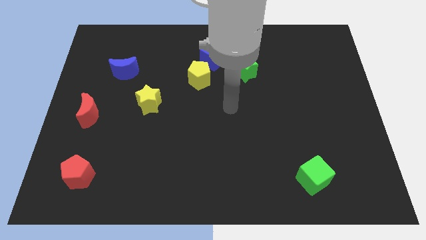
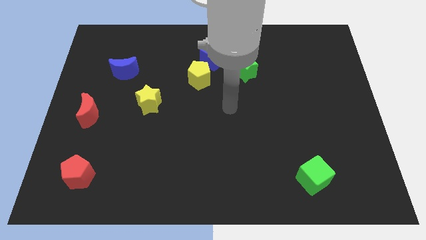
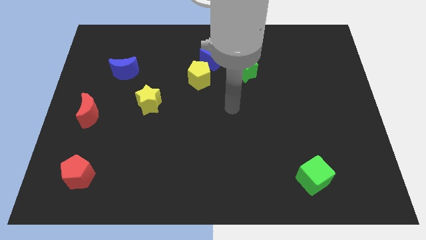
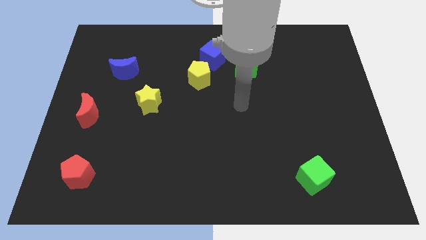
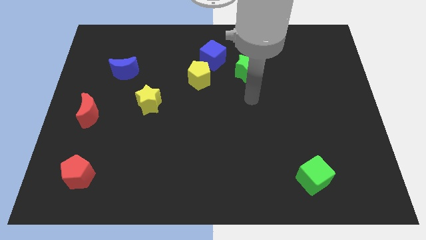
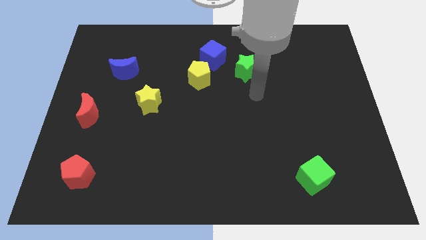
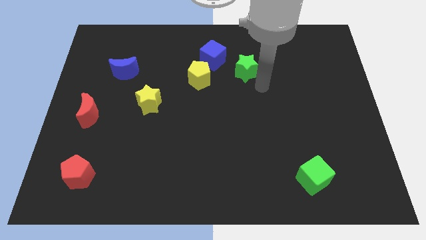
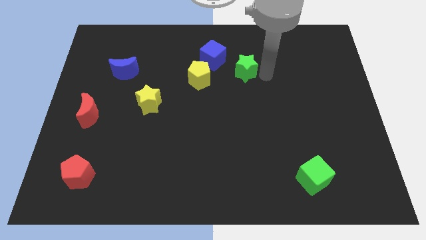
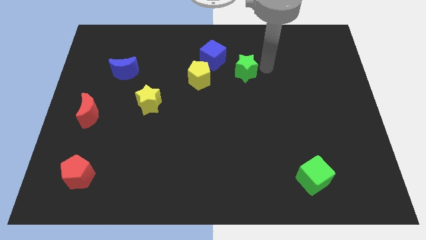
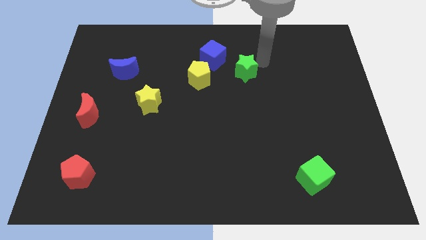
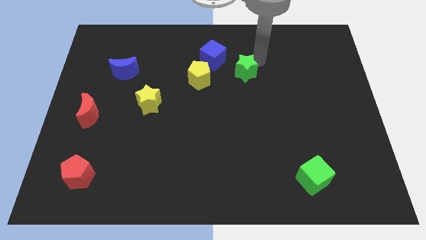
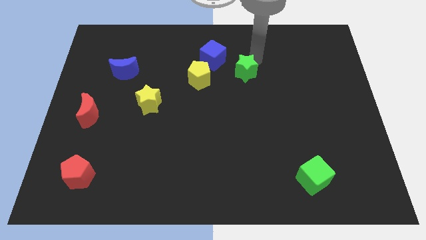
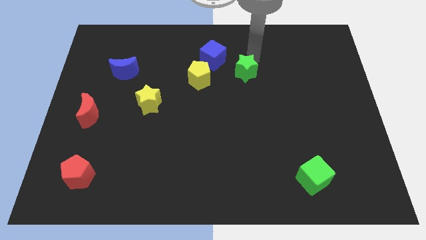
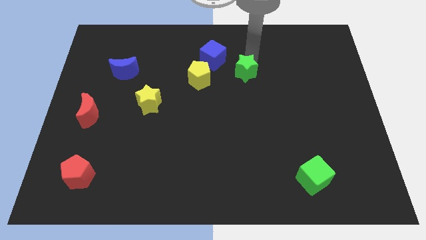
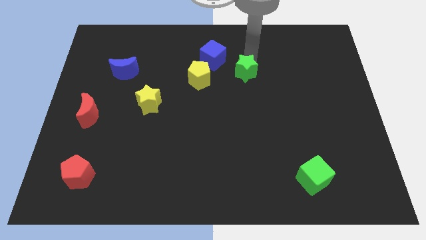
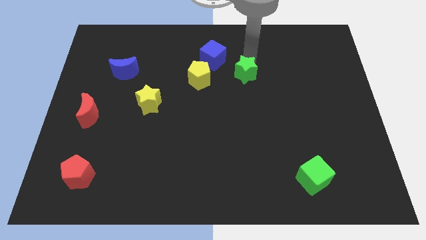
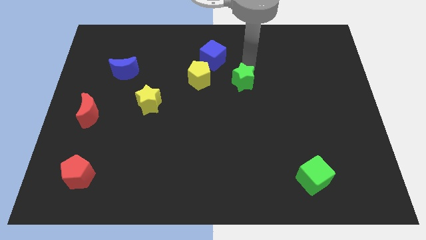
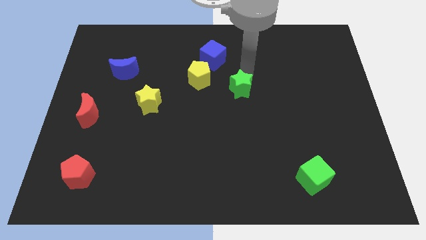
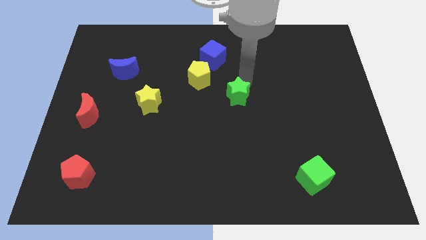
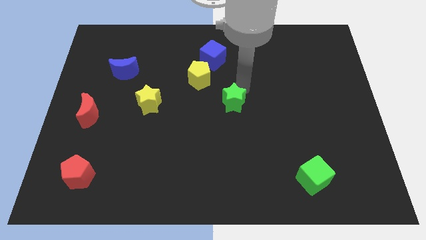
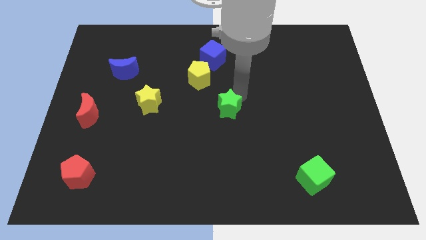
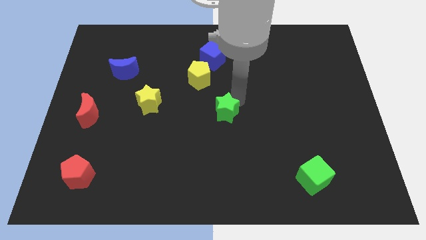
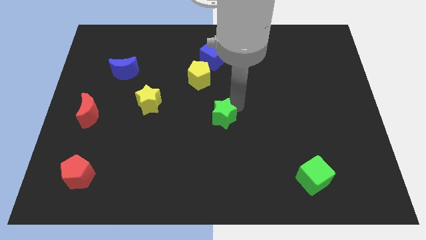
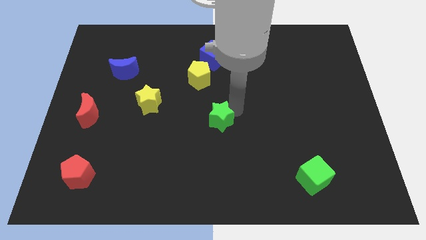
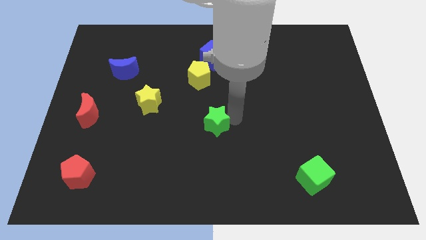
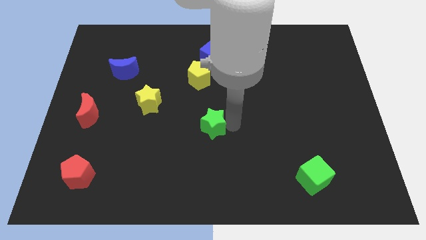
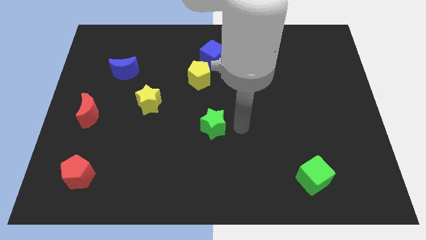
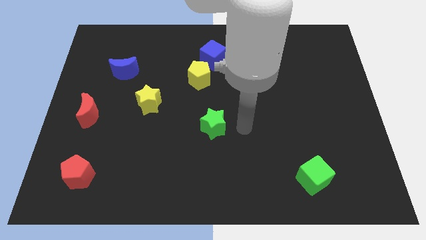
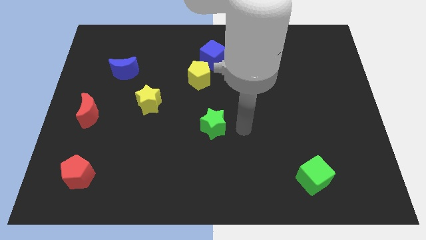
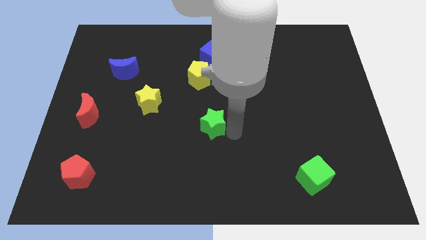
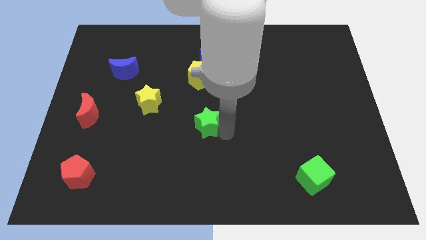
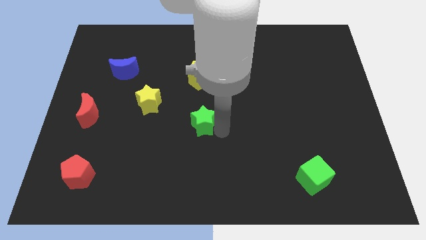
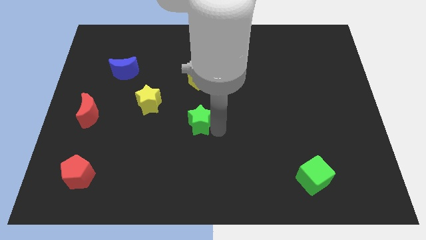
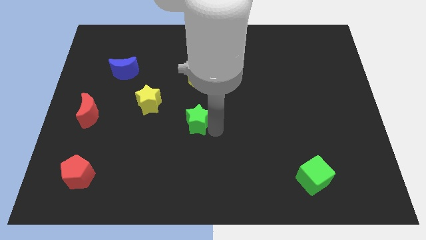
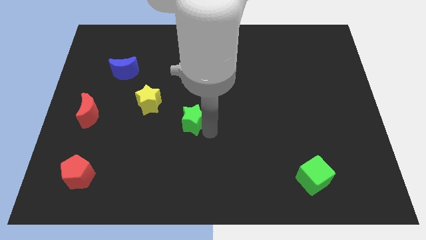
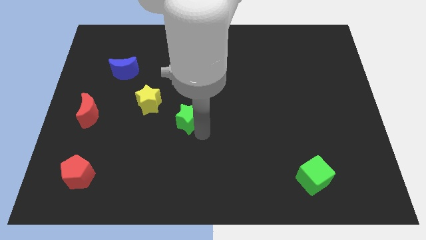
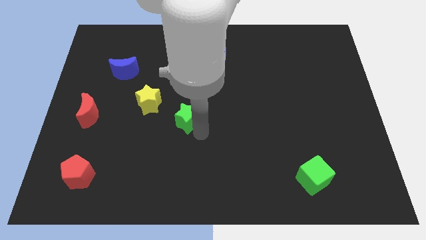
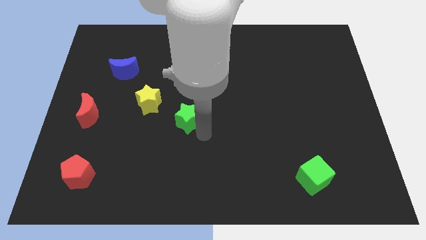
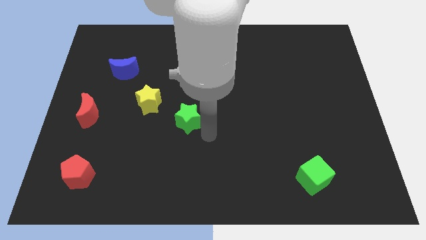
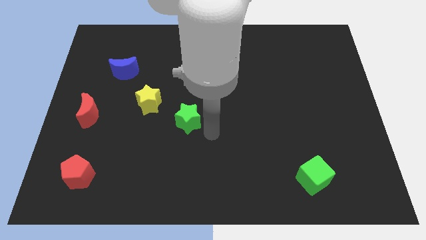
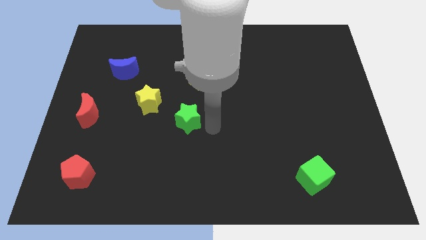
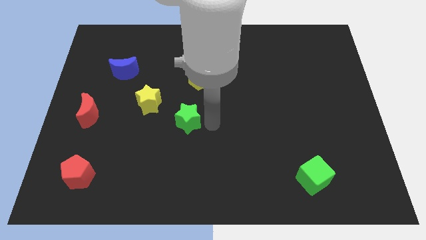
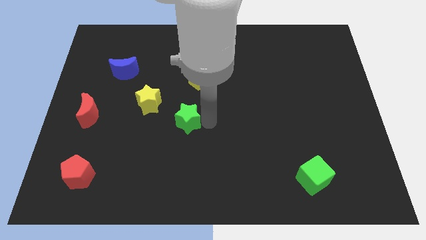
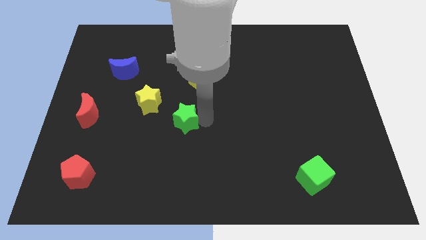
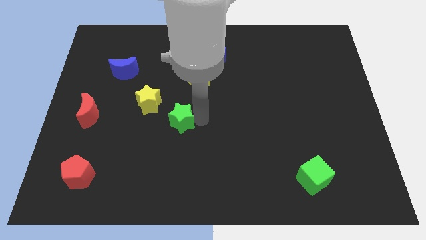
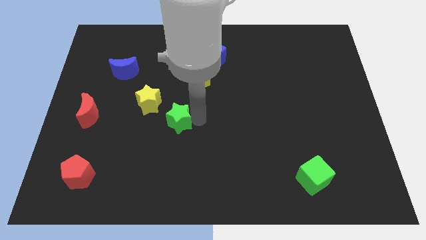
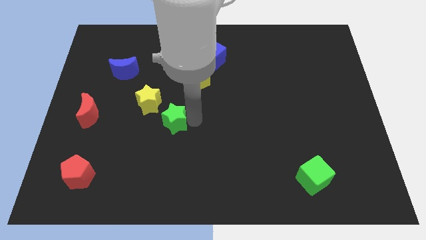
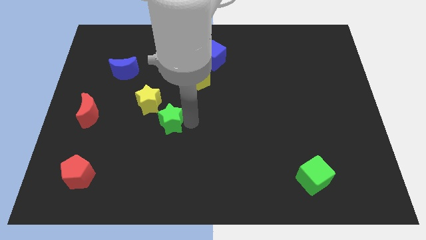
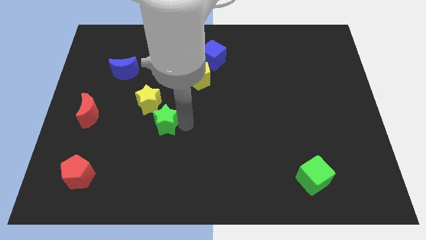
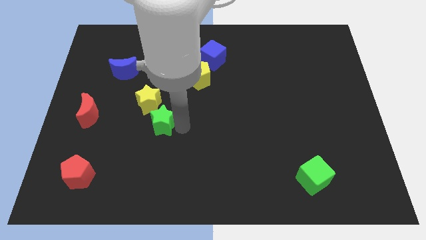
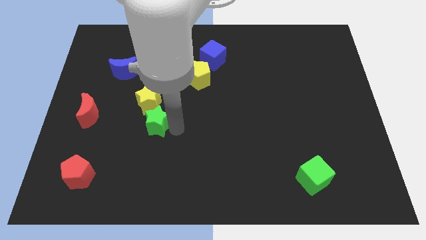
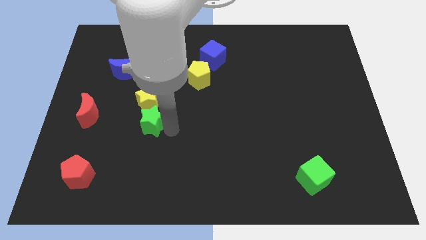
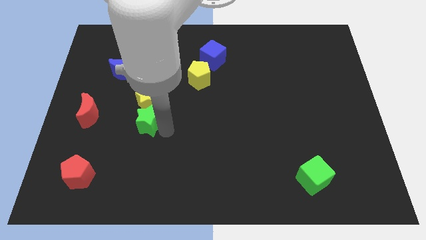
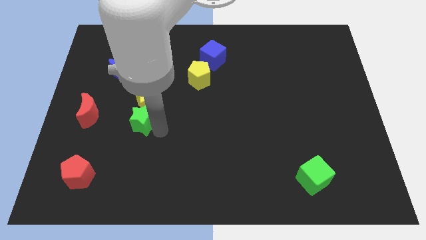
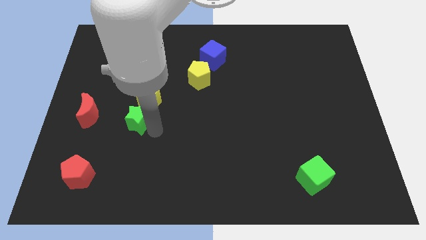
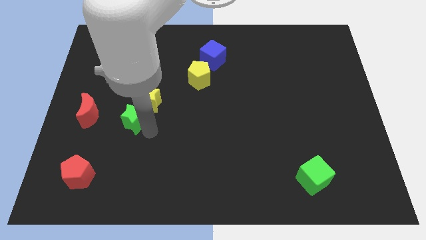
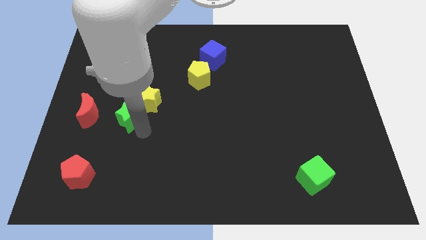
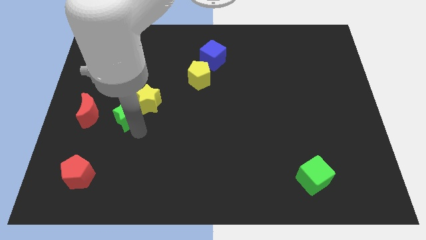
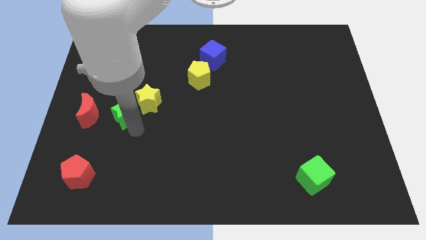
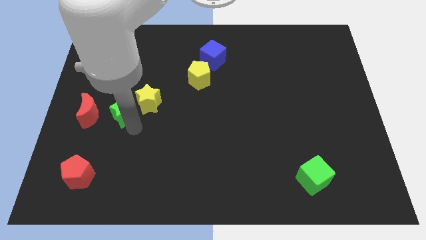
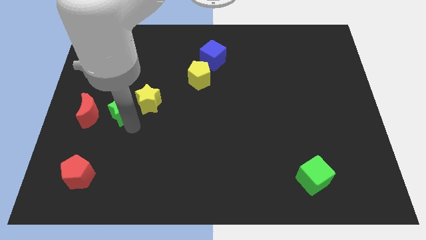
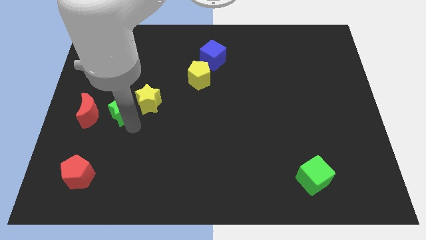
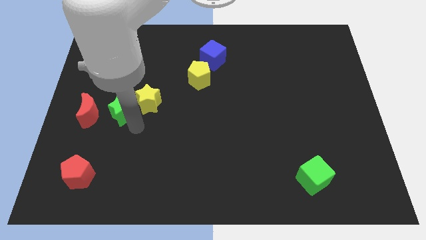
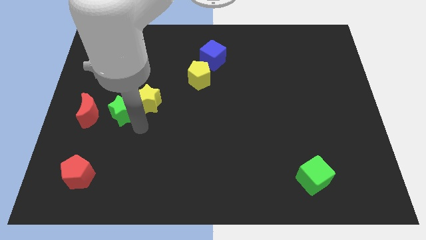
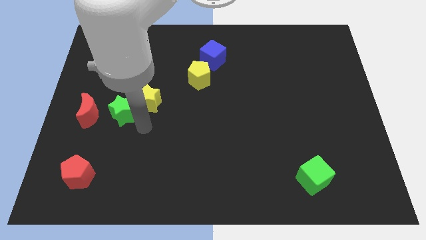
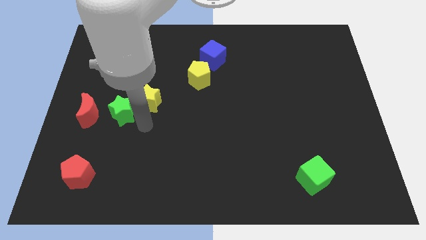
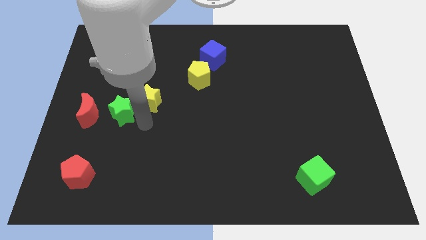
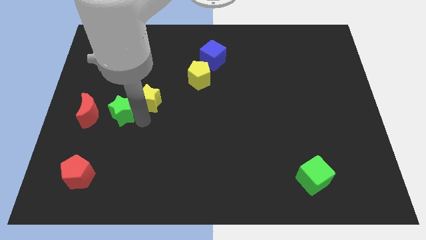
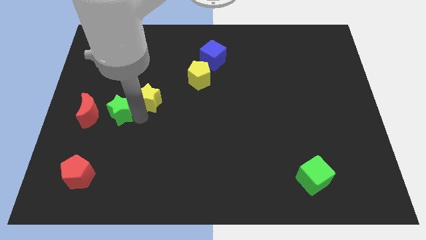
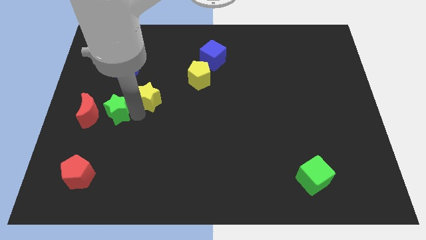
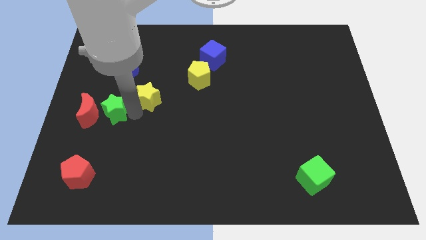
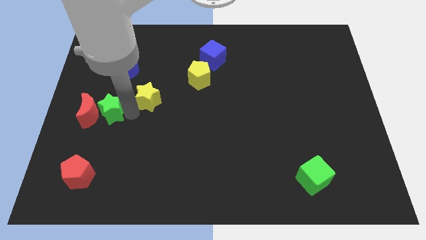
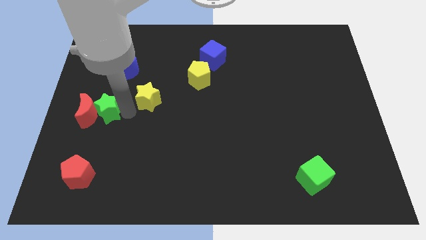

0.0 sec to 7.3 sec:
put the green star to the red moon

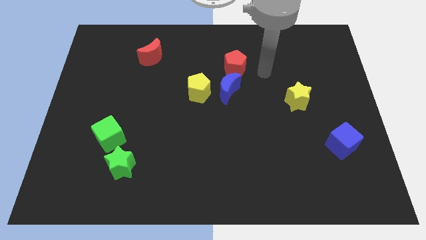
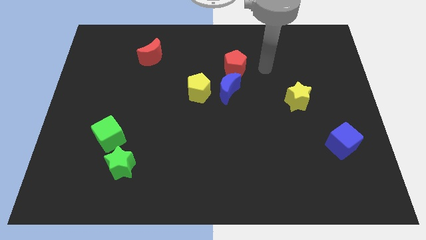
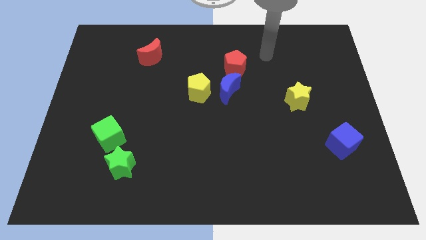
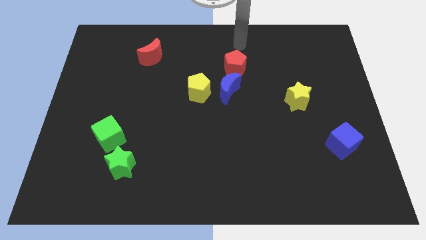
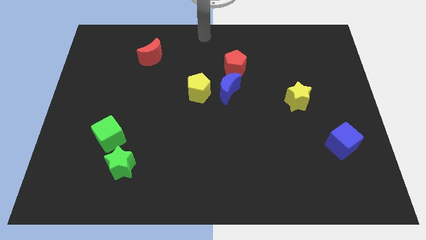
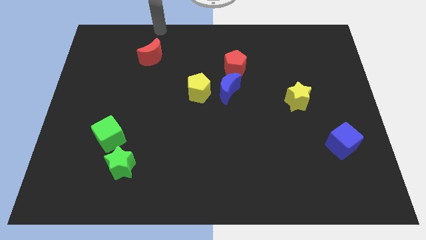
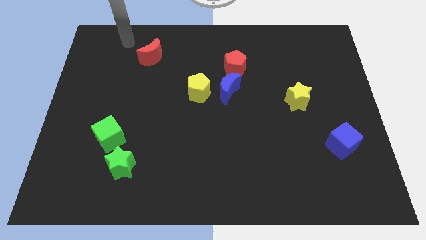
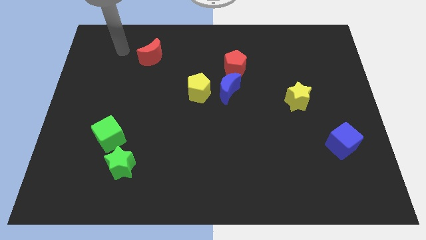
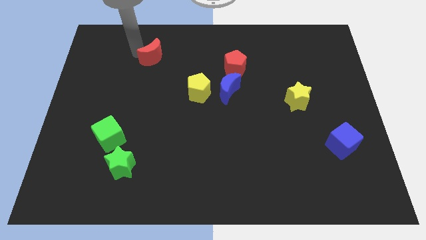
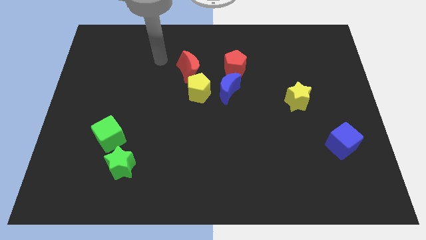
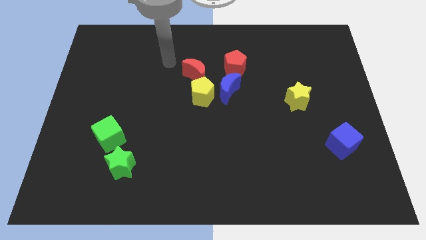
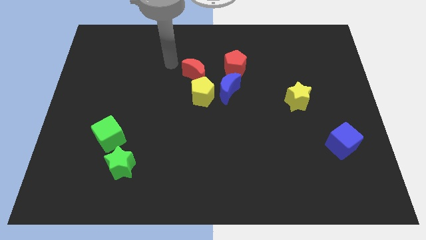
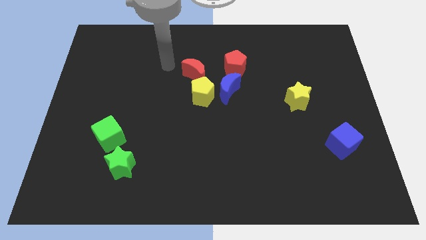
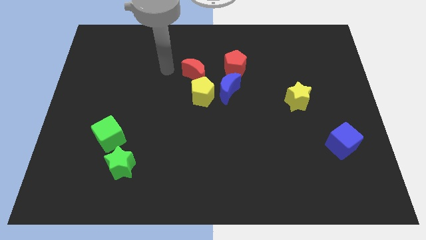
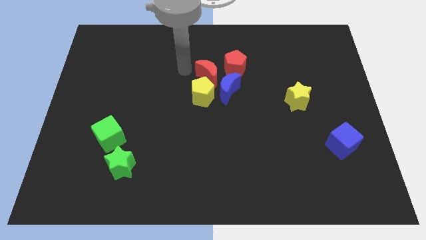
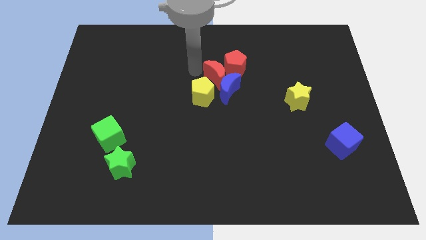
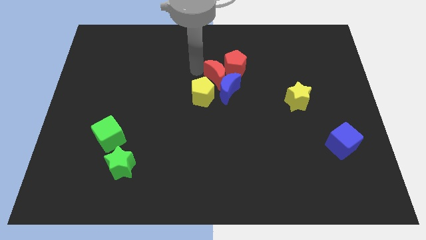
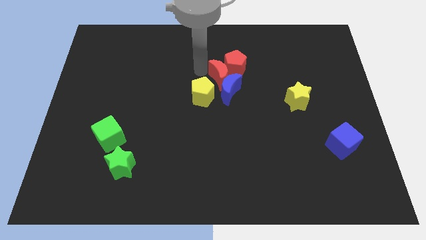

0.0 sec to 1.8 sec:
slide the red moon close to the red pentagon
